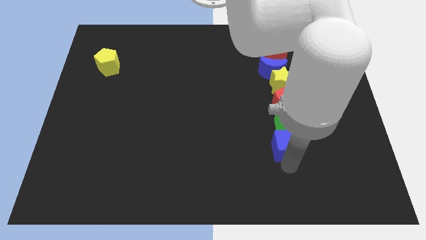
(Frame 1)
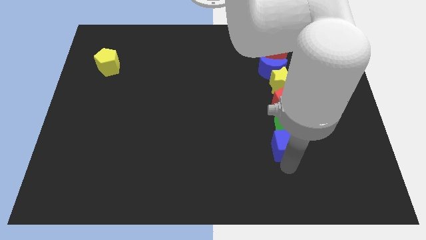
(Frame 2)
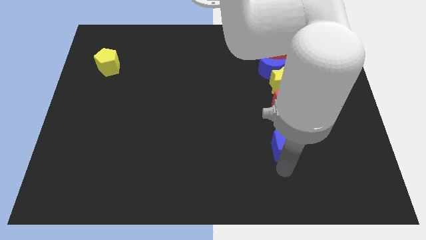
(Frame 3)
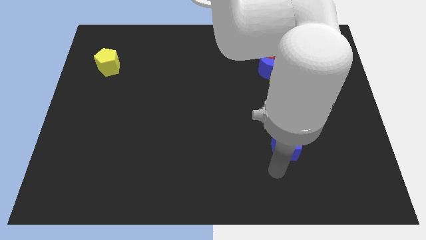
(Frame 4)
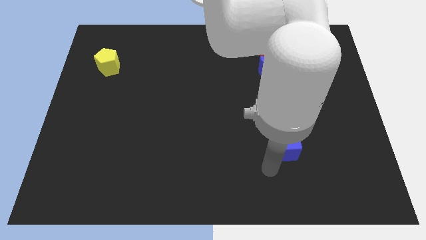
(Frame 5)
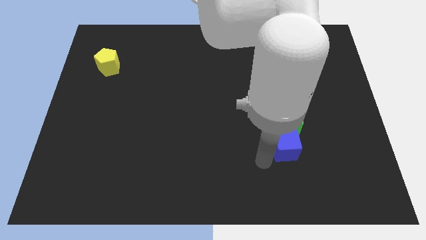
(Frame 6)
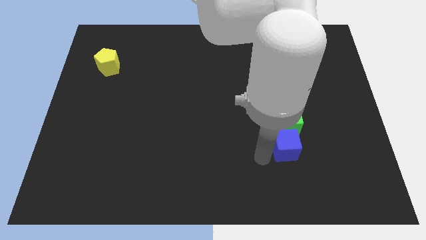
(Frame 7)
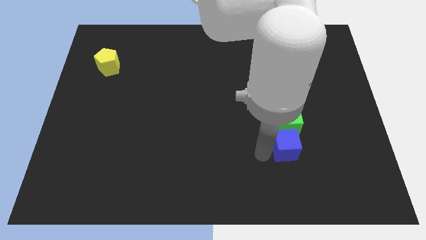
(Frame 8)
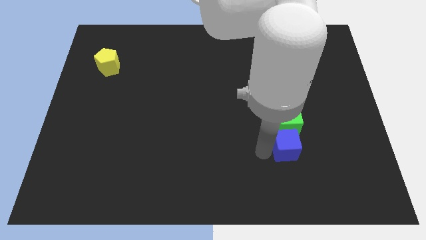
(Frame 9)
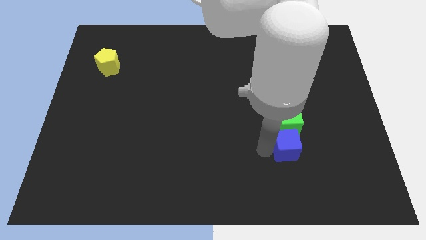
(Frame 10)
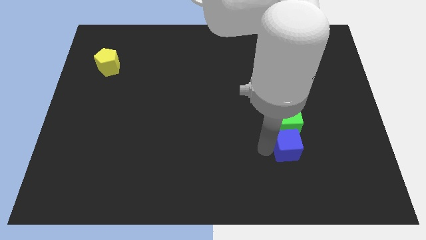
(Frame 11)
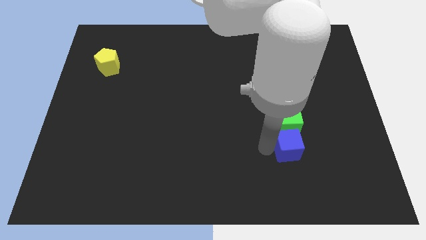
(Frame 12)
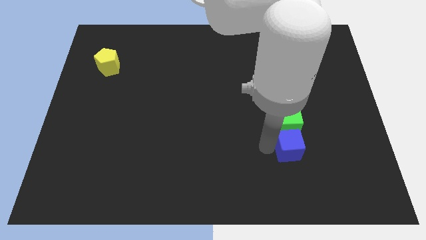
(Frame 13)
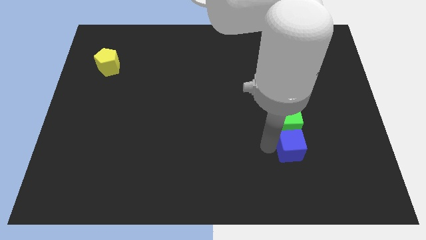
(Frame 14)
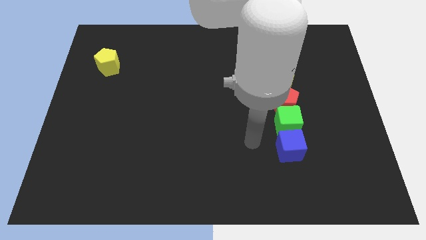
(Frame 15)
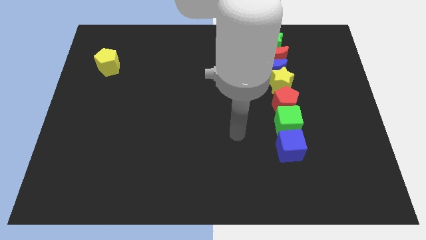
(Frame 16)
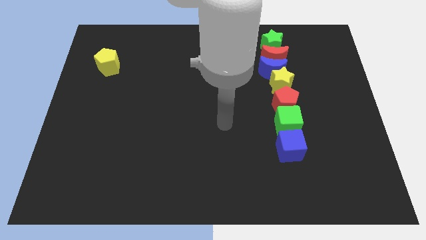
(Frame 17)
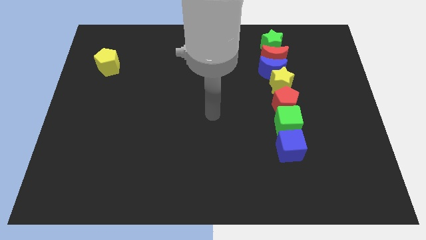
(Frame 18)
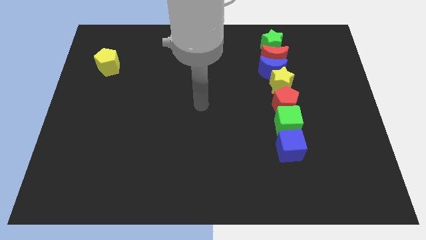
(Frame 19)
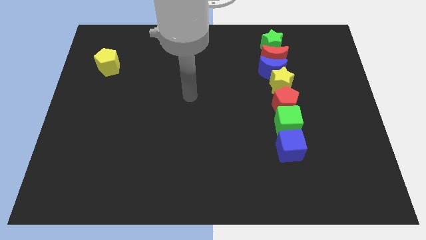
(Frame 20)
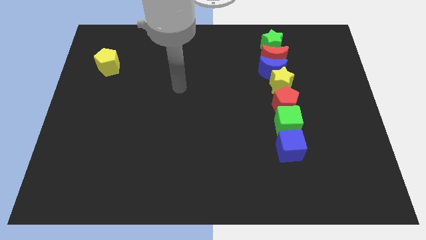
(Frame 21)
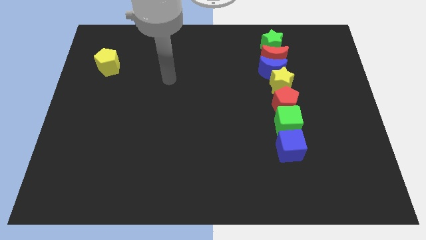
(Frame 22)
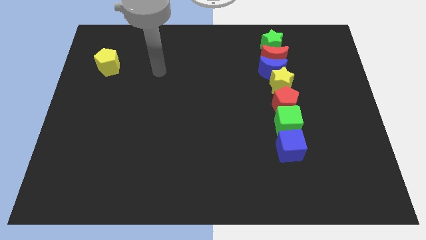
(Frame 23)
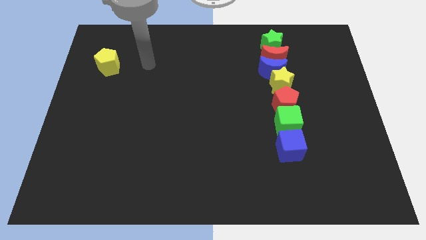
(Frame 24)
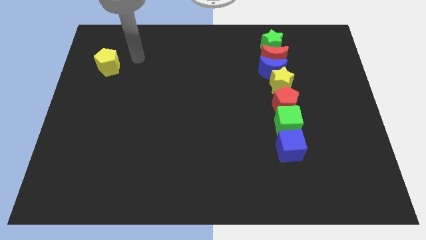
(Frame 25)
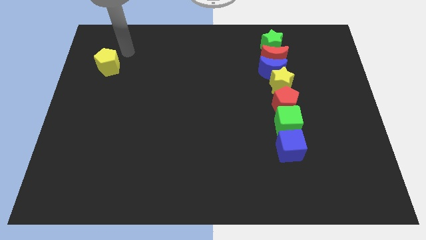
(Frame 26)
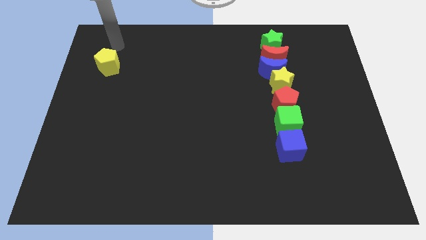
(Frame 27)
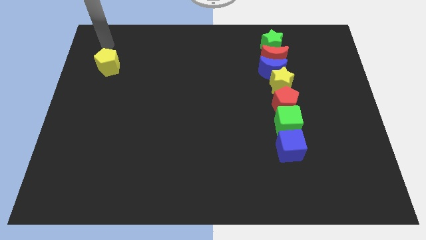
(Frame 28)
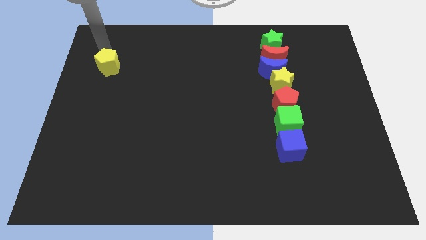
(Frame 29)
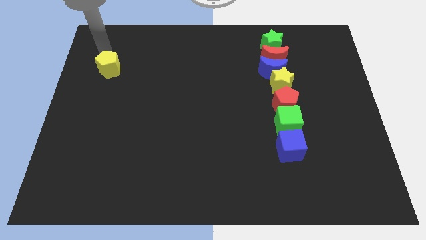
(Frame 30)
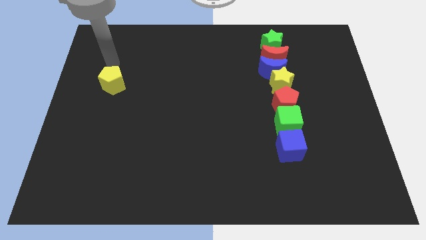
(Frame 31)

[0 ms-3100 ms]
move your arm towards the yellow pentagon

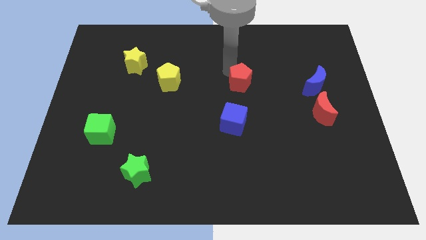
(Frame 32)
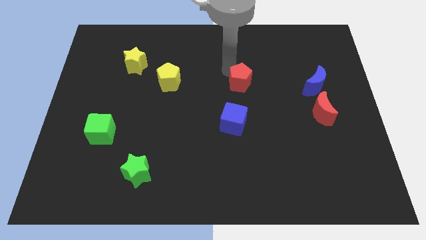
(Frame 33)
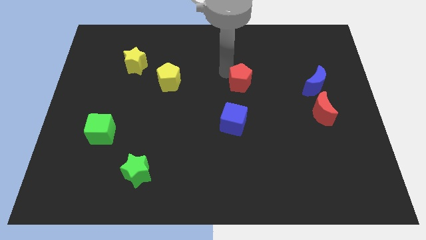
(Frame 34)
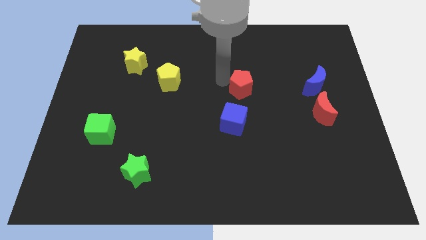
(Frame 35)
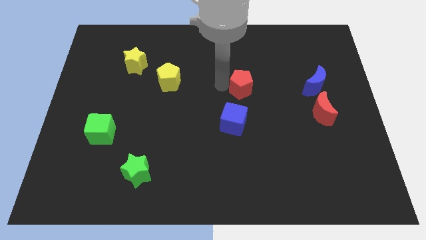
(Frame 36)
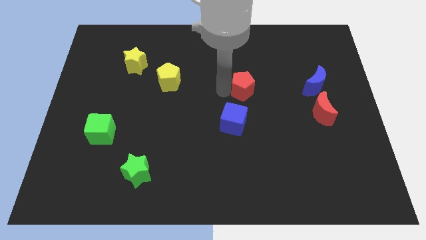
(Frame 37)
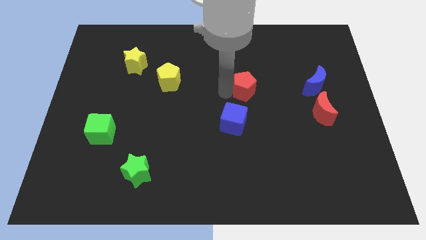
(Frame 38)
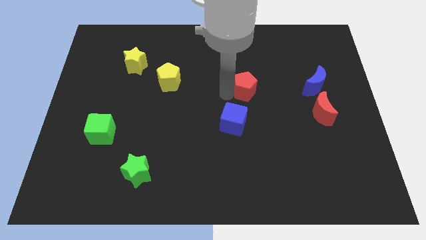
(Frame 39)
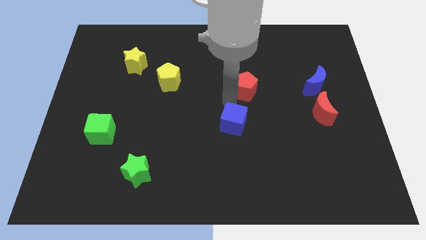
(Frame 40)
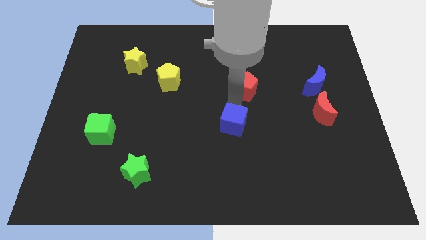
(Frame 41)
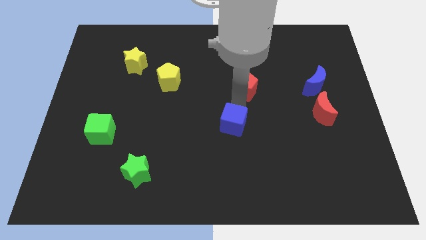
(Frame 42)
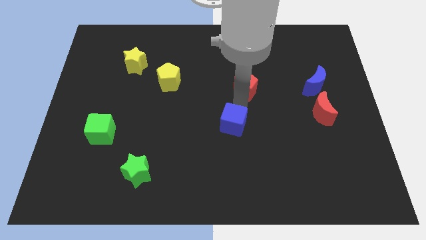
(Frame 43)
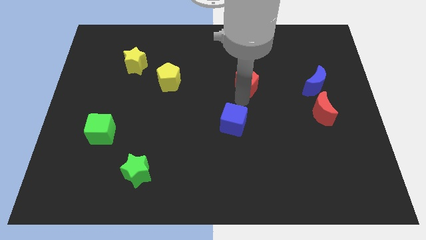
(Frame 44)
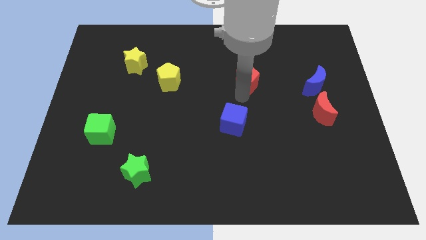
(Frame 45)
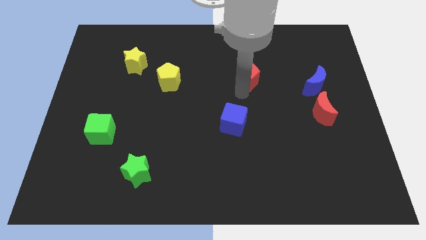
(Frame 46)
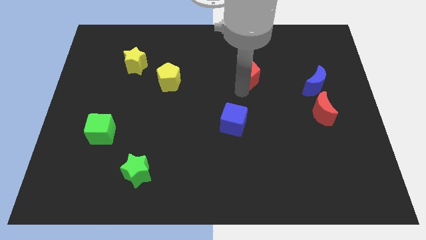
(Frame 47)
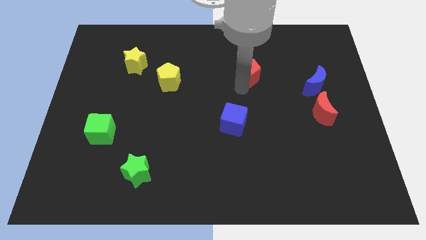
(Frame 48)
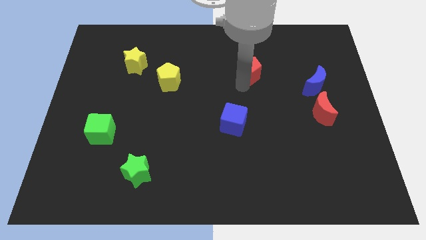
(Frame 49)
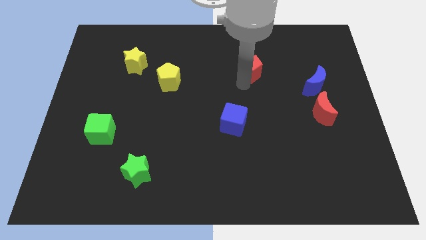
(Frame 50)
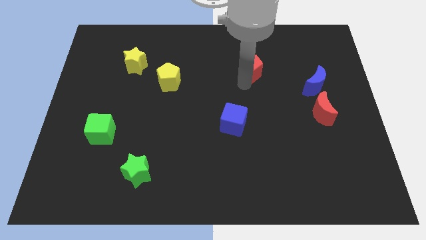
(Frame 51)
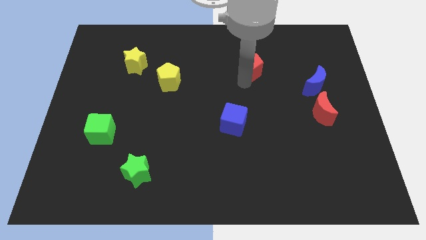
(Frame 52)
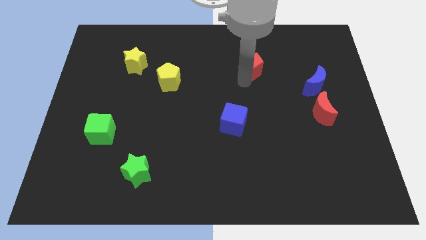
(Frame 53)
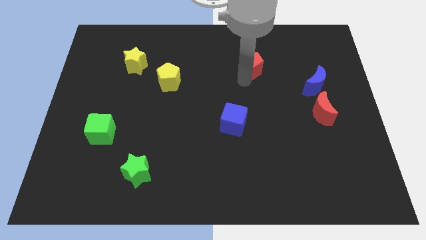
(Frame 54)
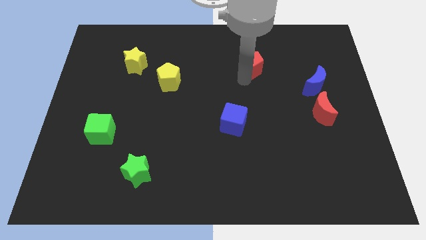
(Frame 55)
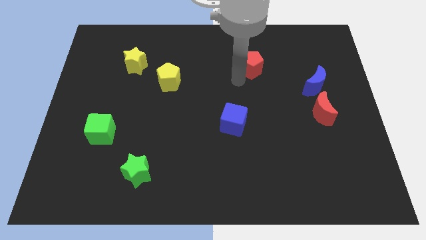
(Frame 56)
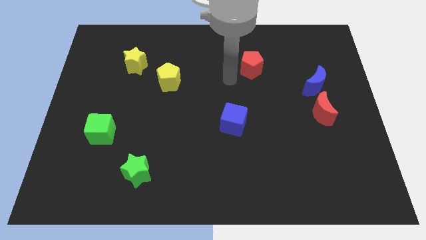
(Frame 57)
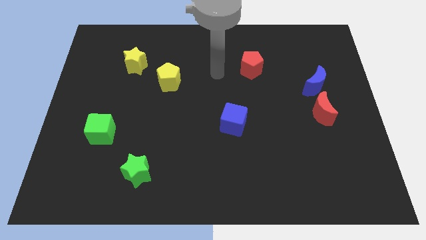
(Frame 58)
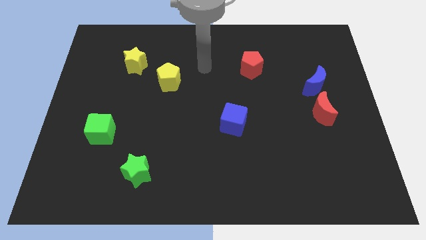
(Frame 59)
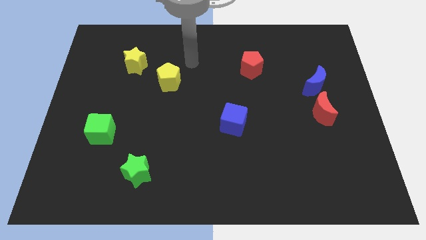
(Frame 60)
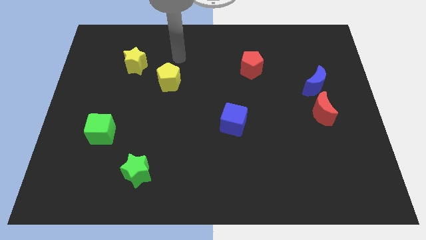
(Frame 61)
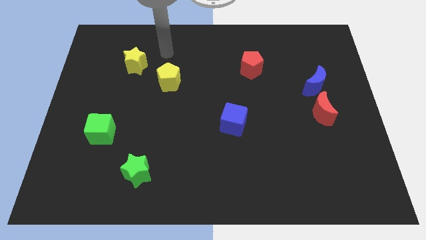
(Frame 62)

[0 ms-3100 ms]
move the red pentagon slightly towards up

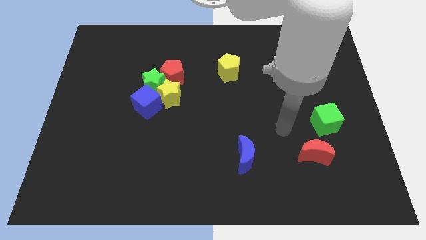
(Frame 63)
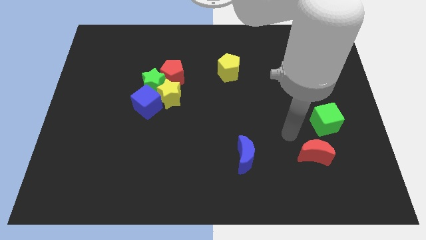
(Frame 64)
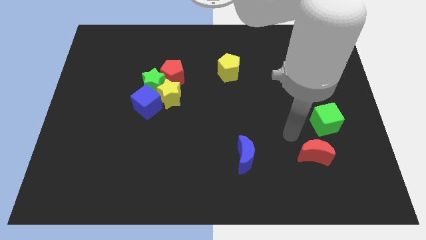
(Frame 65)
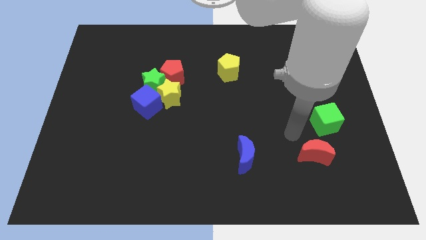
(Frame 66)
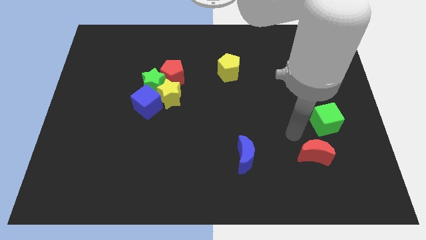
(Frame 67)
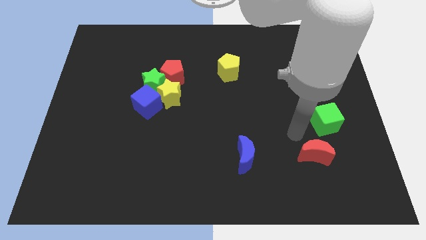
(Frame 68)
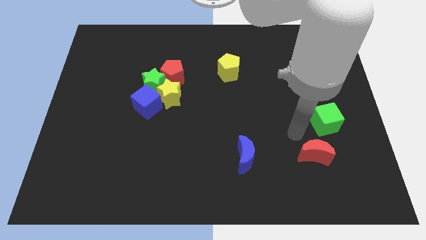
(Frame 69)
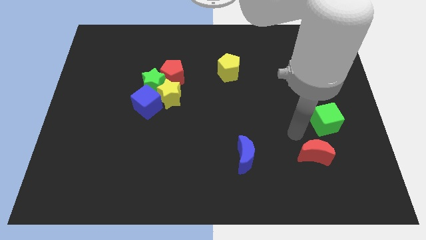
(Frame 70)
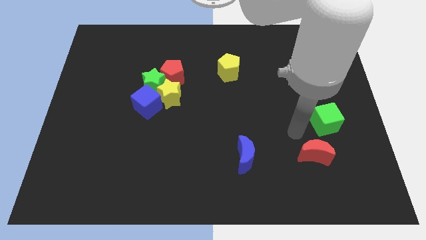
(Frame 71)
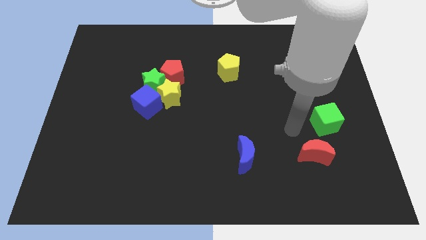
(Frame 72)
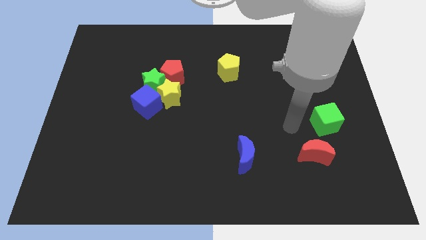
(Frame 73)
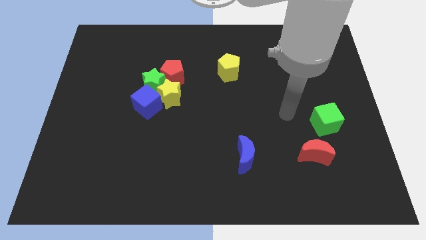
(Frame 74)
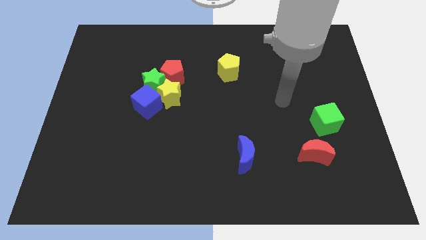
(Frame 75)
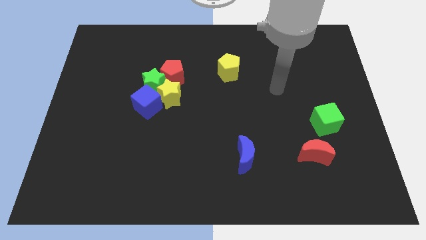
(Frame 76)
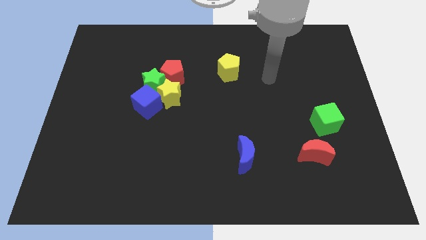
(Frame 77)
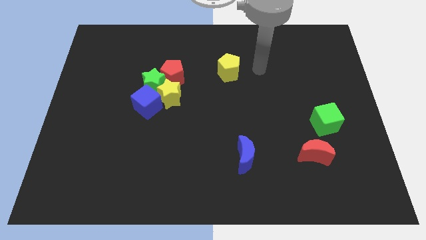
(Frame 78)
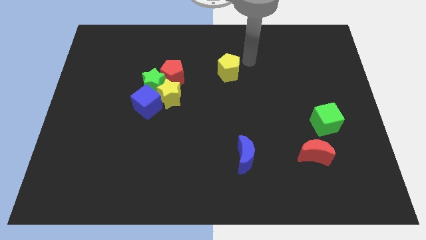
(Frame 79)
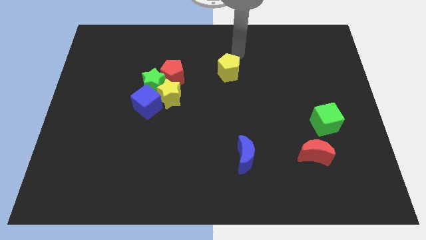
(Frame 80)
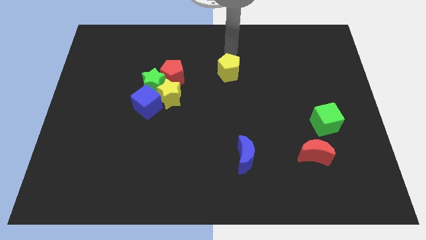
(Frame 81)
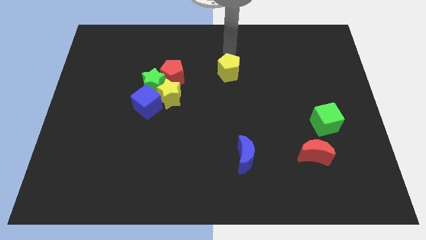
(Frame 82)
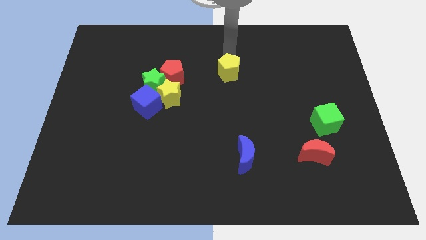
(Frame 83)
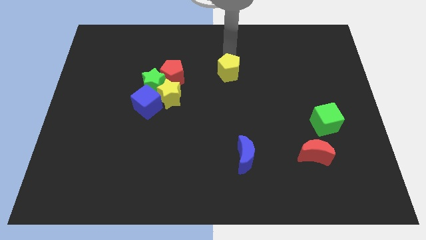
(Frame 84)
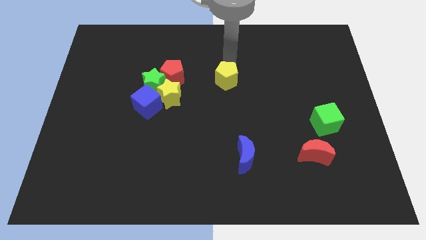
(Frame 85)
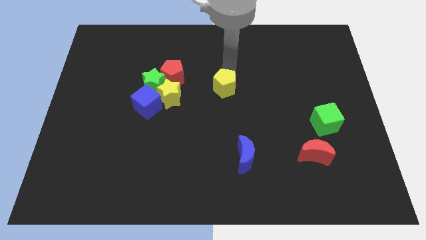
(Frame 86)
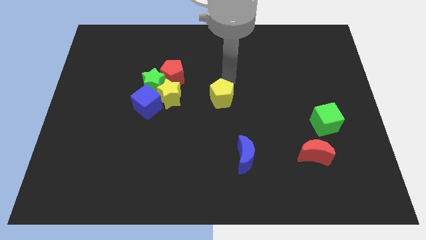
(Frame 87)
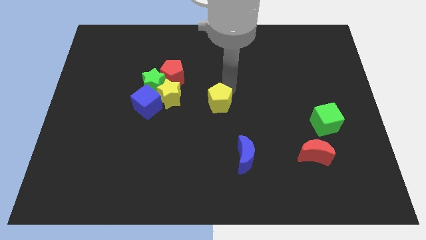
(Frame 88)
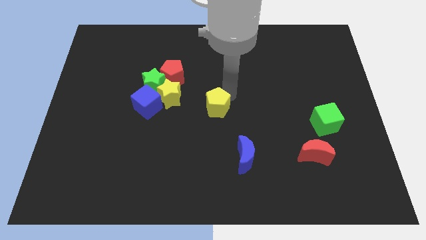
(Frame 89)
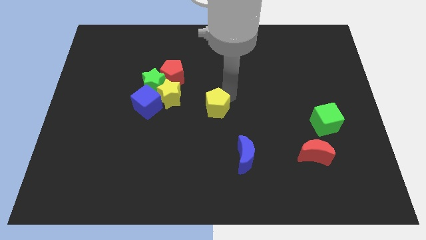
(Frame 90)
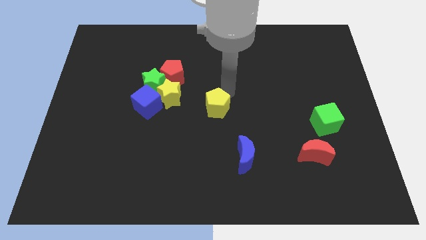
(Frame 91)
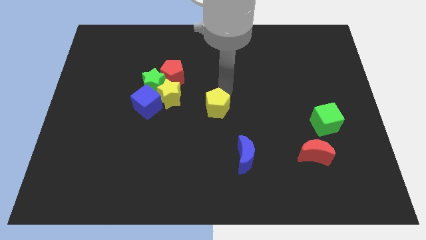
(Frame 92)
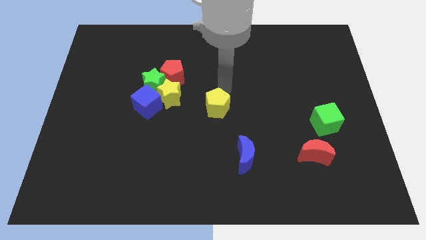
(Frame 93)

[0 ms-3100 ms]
push the yellow pentagon towards the center of the board
